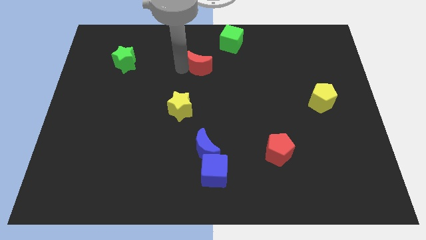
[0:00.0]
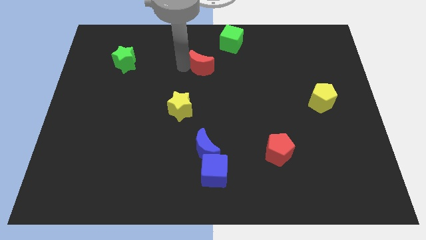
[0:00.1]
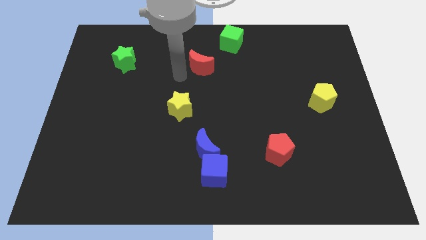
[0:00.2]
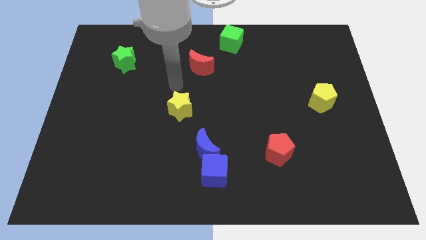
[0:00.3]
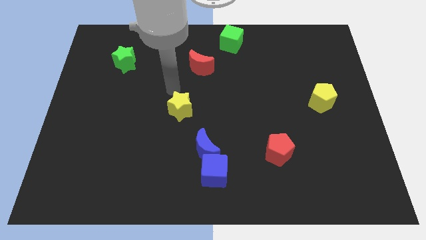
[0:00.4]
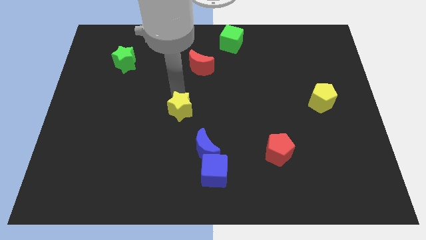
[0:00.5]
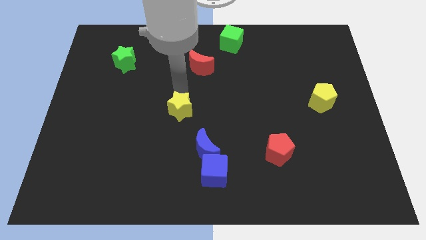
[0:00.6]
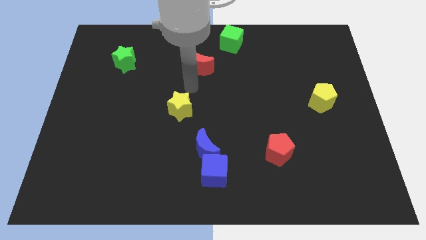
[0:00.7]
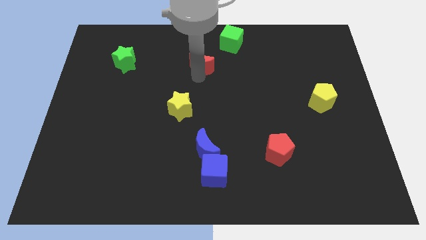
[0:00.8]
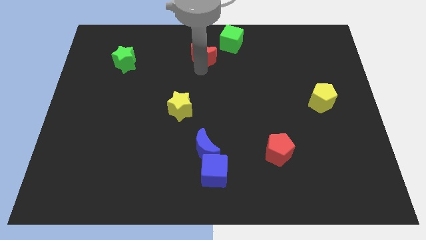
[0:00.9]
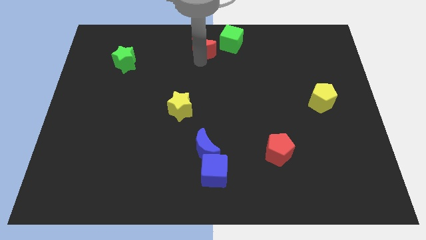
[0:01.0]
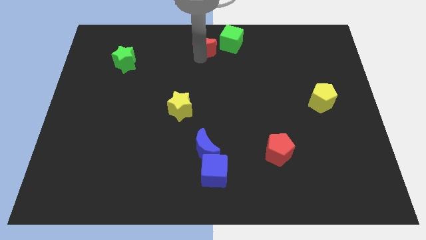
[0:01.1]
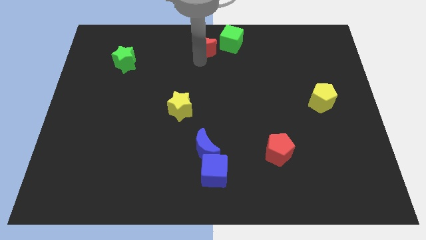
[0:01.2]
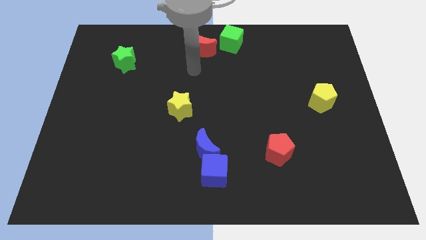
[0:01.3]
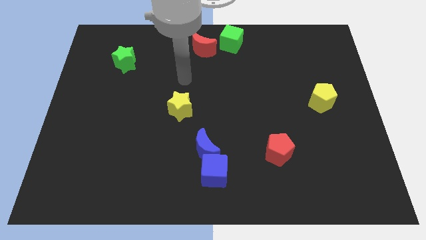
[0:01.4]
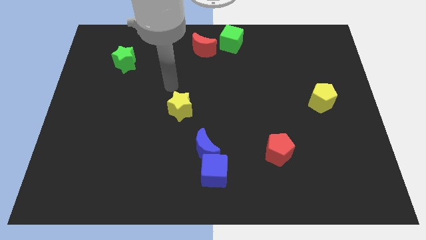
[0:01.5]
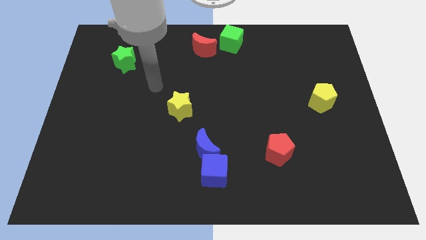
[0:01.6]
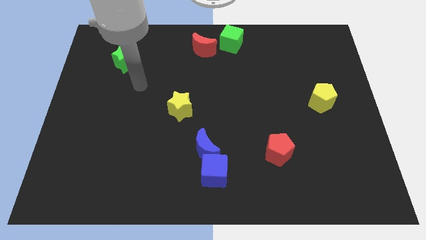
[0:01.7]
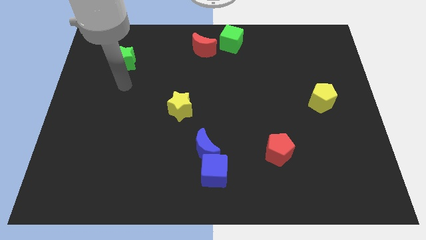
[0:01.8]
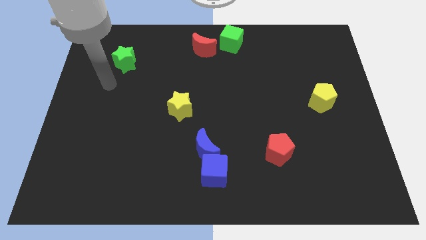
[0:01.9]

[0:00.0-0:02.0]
move the red moon close to the green cube

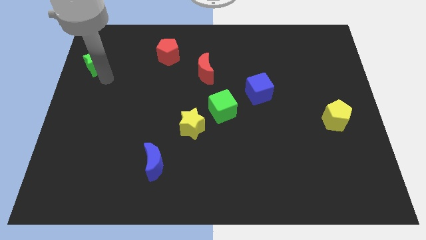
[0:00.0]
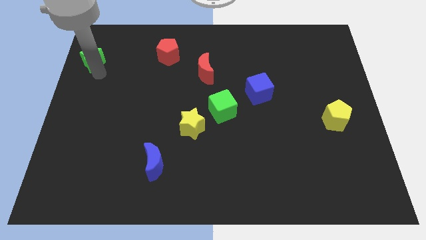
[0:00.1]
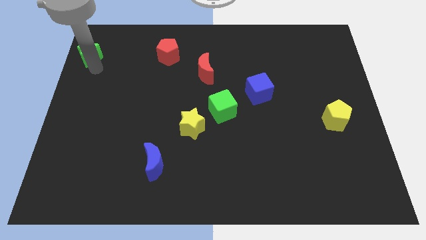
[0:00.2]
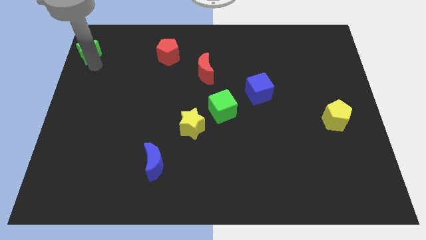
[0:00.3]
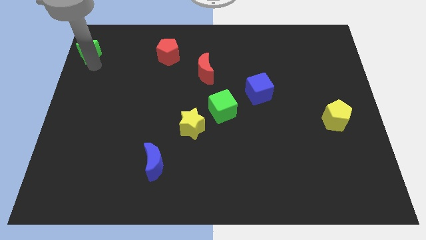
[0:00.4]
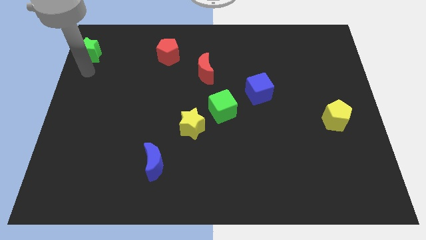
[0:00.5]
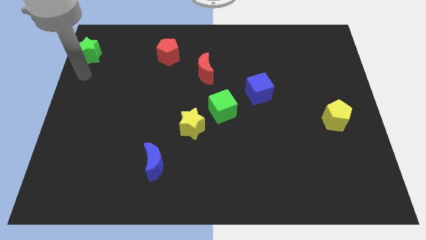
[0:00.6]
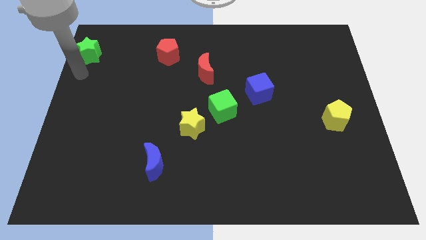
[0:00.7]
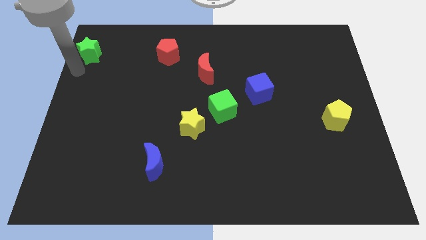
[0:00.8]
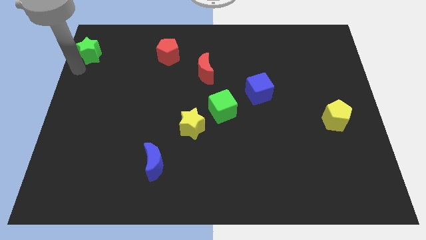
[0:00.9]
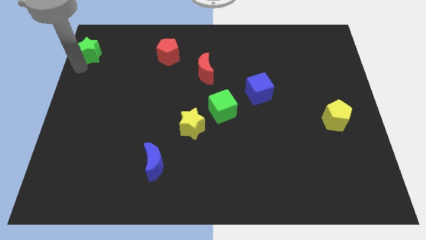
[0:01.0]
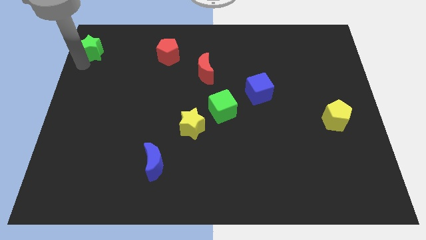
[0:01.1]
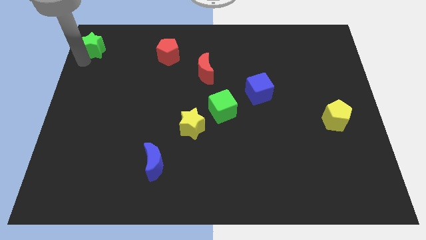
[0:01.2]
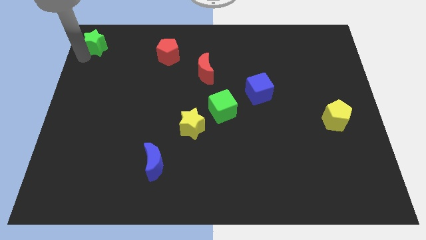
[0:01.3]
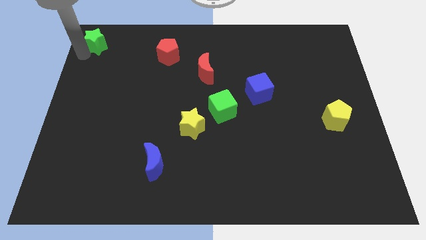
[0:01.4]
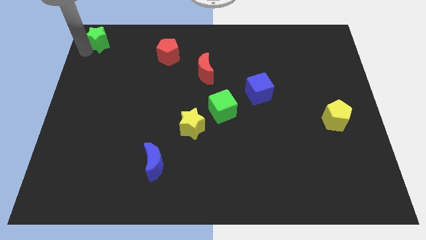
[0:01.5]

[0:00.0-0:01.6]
move green star slightly up

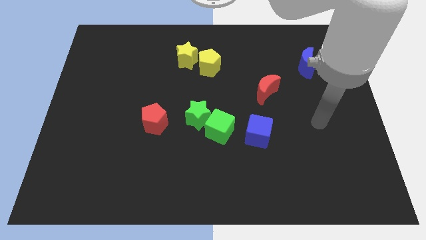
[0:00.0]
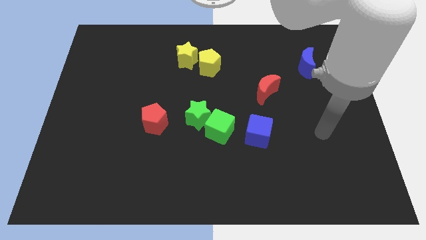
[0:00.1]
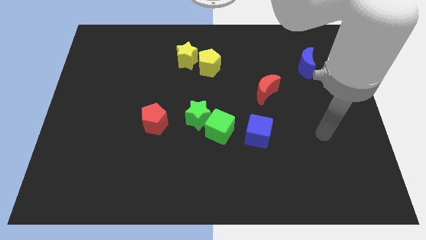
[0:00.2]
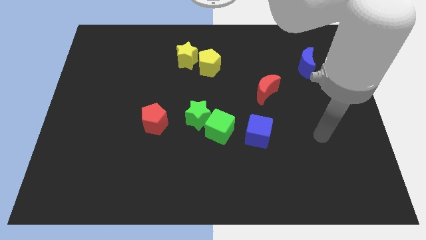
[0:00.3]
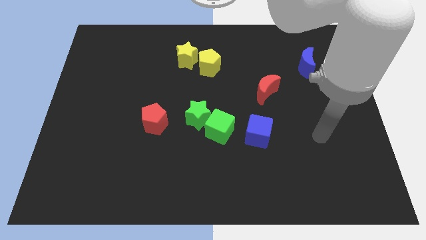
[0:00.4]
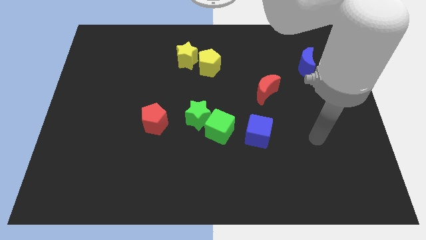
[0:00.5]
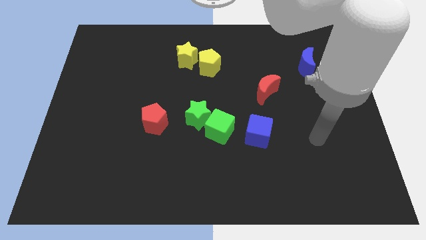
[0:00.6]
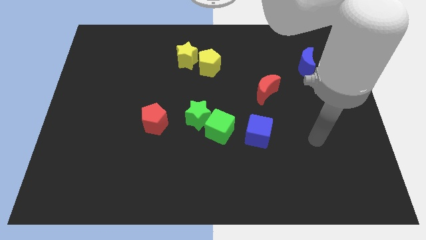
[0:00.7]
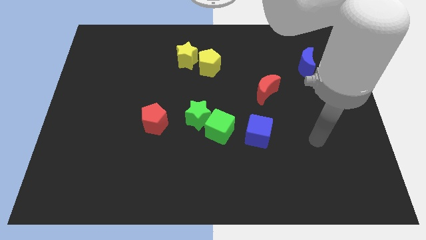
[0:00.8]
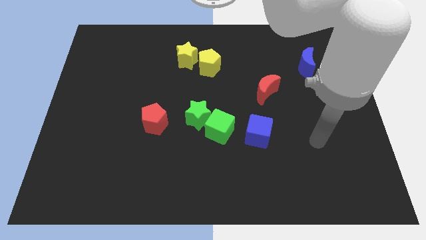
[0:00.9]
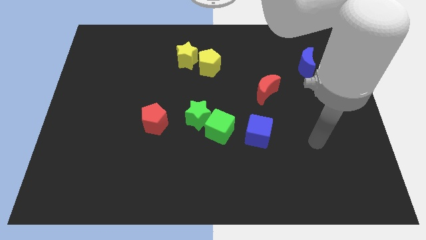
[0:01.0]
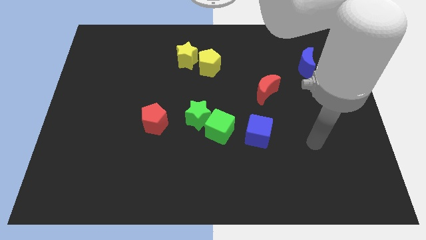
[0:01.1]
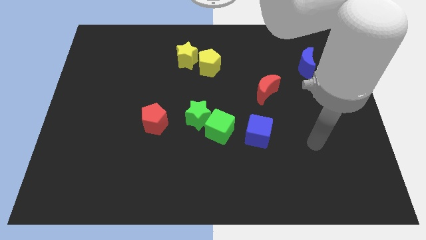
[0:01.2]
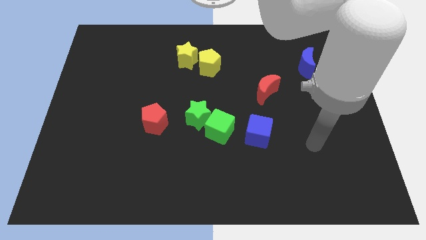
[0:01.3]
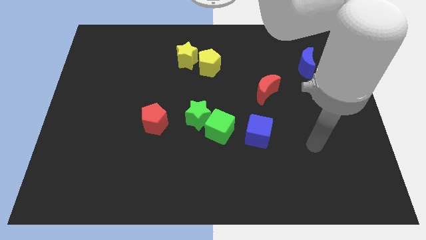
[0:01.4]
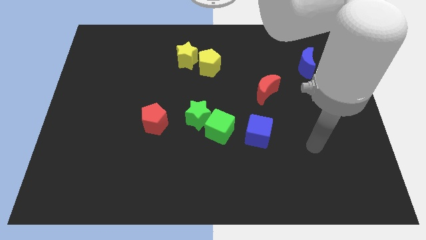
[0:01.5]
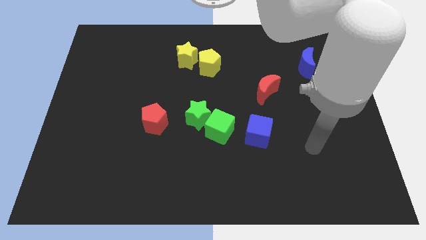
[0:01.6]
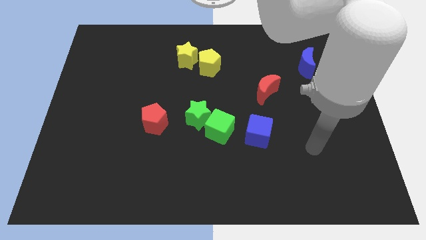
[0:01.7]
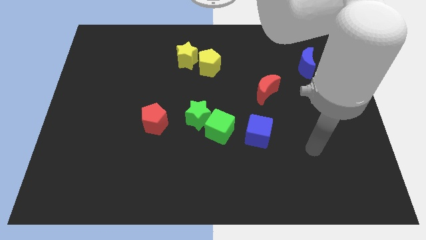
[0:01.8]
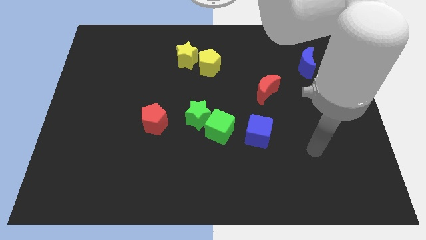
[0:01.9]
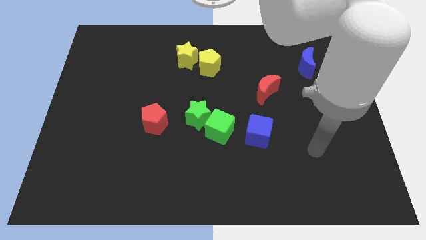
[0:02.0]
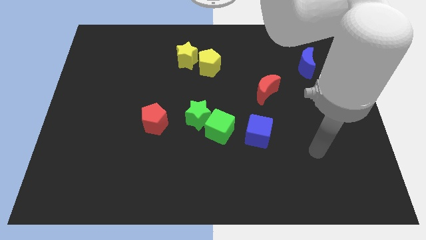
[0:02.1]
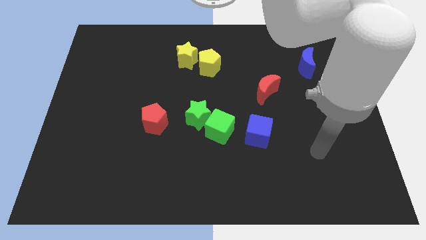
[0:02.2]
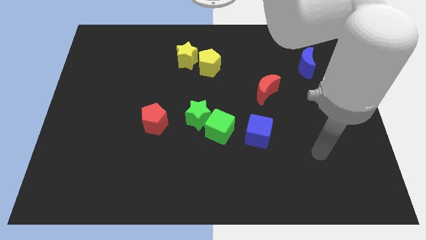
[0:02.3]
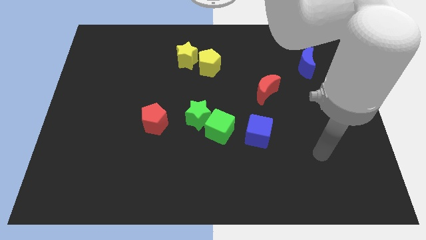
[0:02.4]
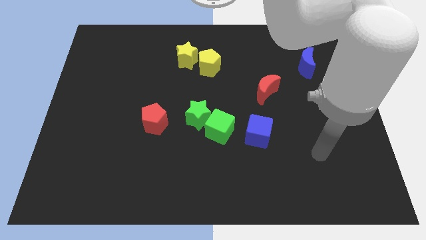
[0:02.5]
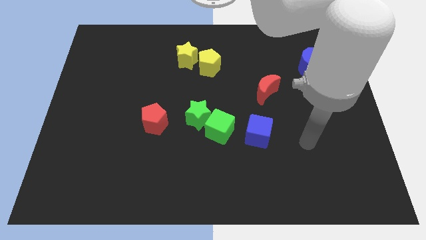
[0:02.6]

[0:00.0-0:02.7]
point the arm to the right of the blue cube

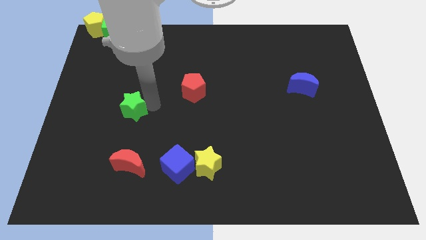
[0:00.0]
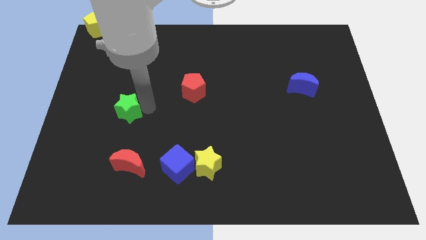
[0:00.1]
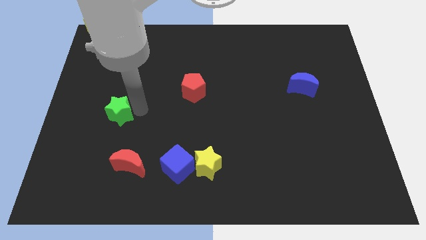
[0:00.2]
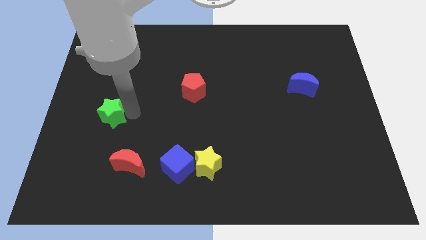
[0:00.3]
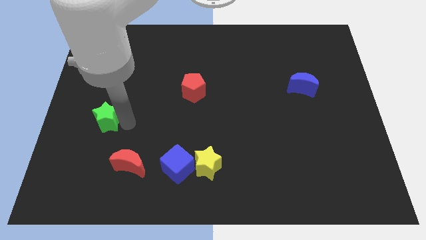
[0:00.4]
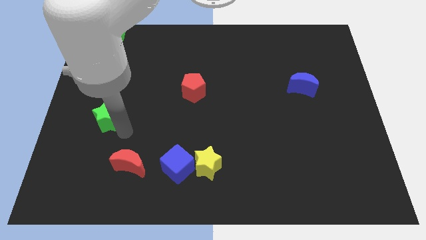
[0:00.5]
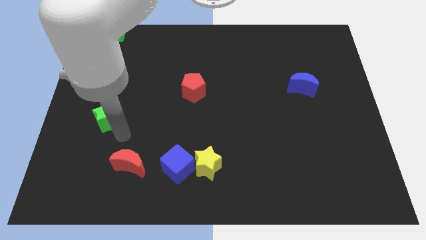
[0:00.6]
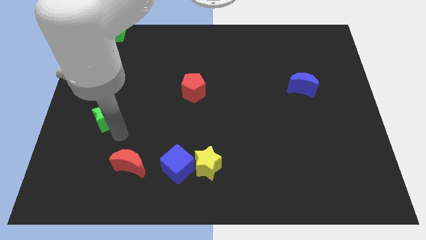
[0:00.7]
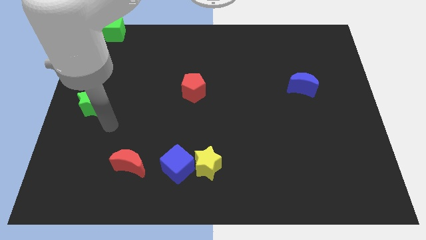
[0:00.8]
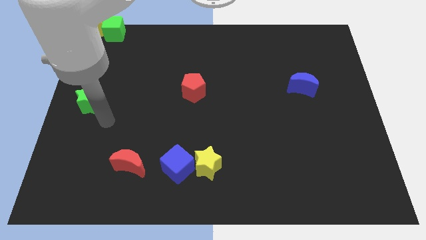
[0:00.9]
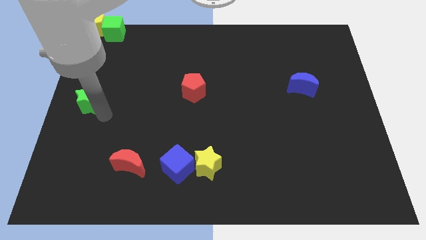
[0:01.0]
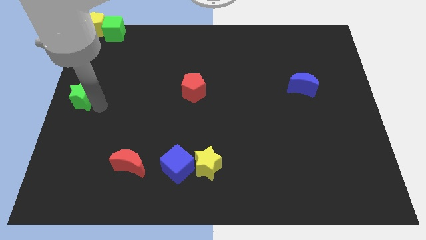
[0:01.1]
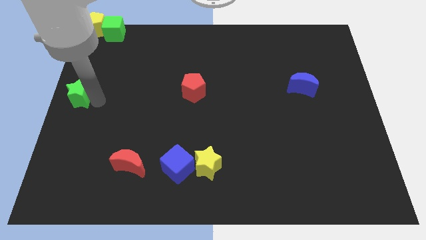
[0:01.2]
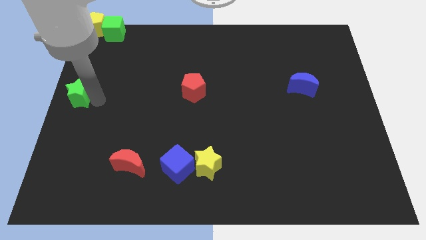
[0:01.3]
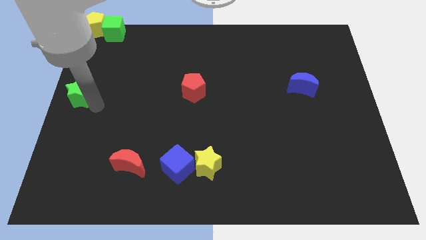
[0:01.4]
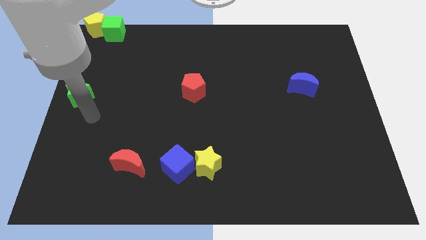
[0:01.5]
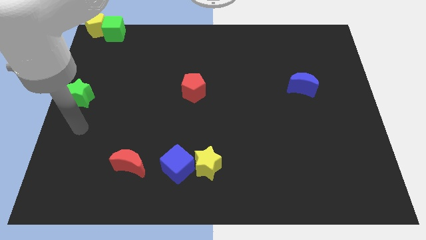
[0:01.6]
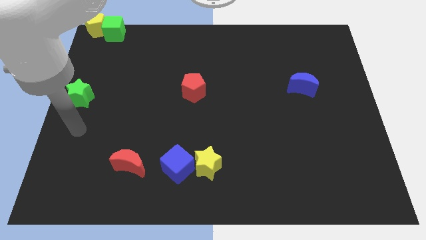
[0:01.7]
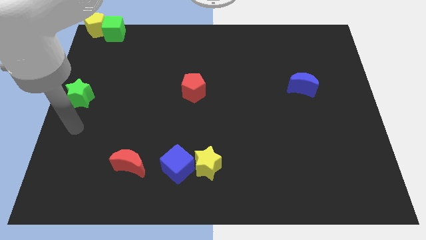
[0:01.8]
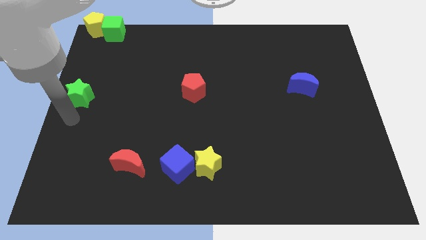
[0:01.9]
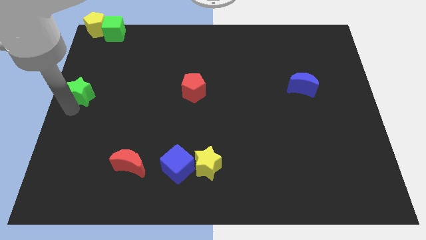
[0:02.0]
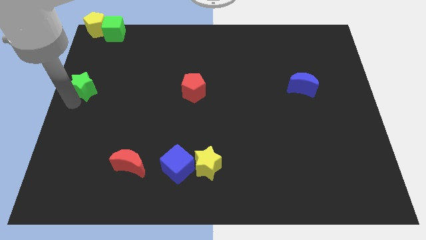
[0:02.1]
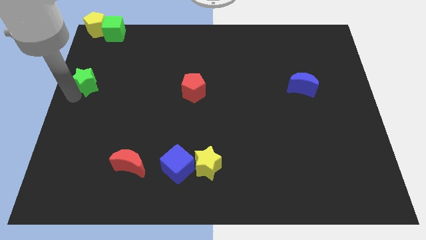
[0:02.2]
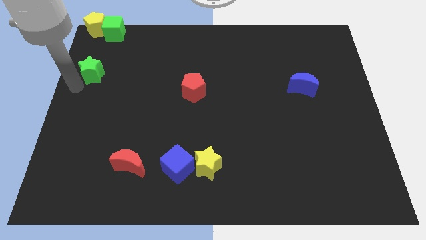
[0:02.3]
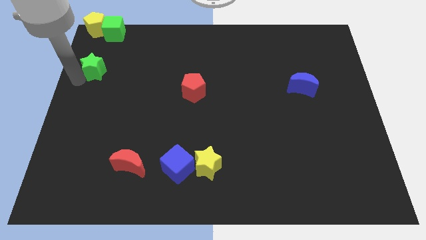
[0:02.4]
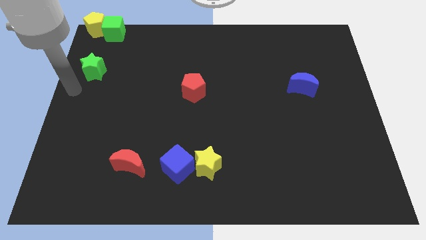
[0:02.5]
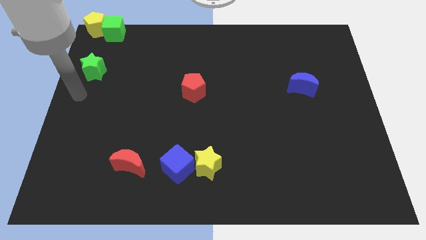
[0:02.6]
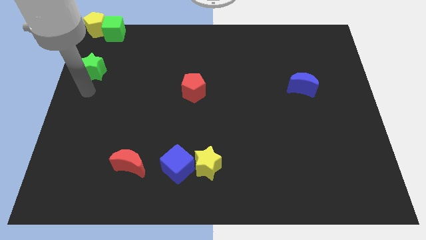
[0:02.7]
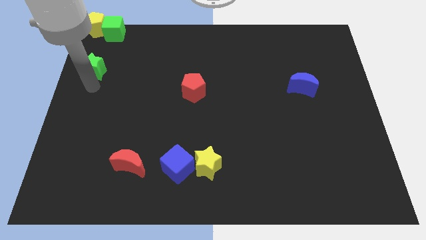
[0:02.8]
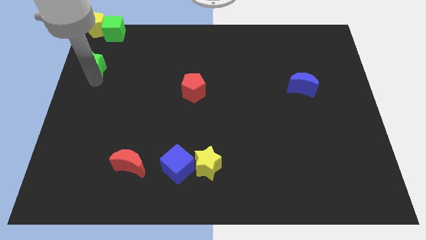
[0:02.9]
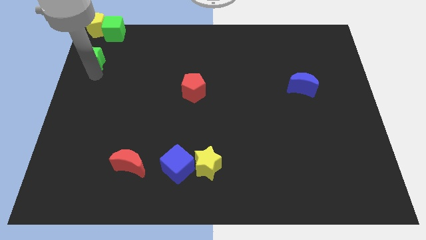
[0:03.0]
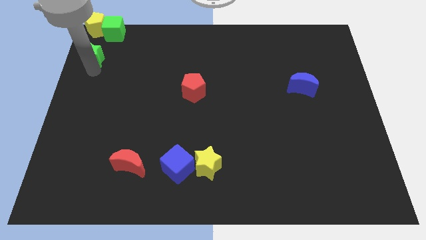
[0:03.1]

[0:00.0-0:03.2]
place the green star vertically below green cube
